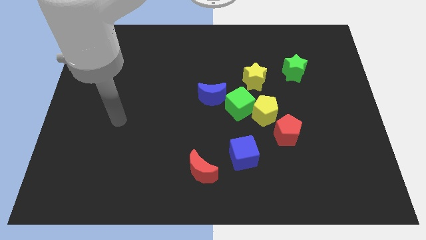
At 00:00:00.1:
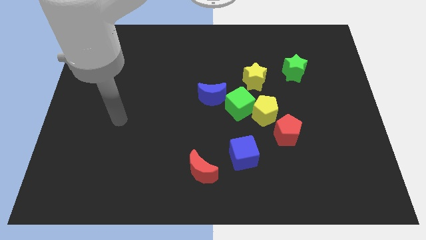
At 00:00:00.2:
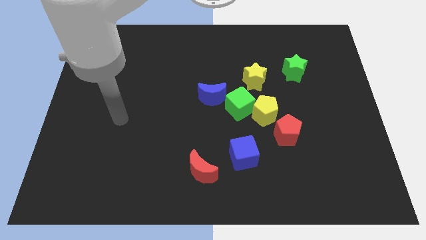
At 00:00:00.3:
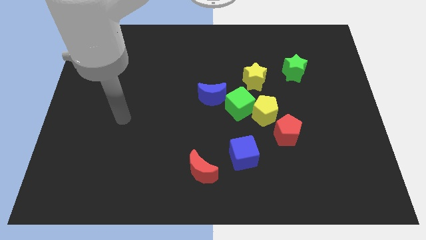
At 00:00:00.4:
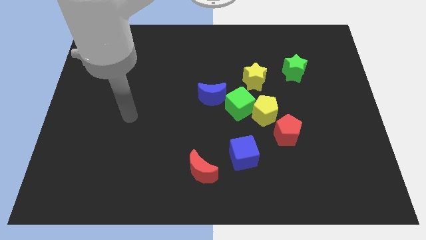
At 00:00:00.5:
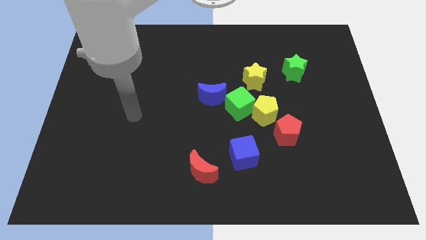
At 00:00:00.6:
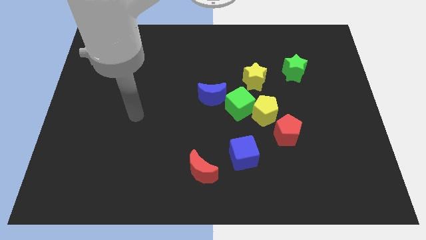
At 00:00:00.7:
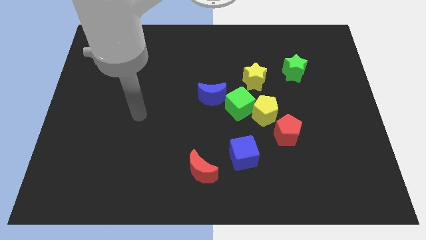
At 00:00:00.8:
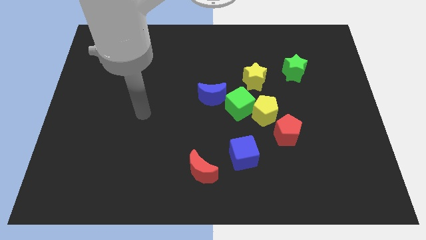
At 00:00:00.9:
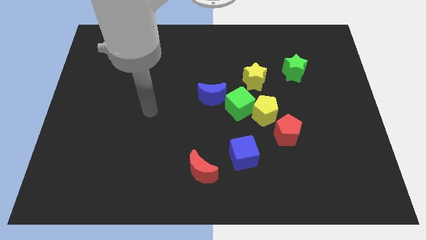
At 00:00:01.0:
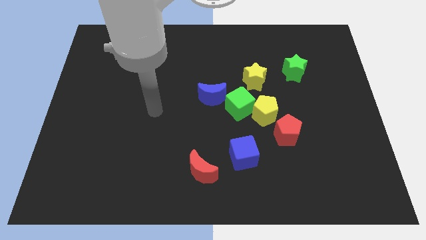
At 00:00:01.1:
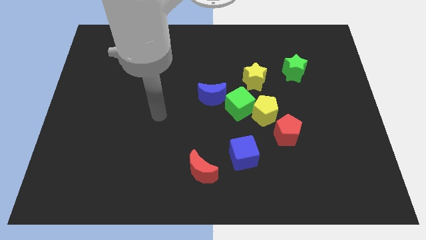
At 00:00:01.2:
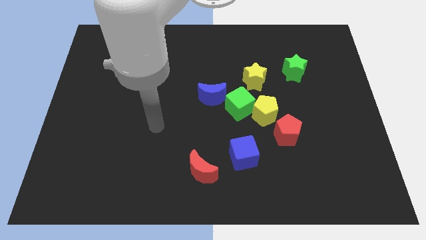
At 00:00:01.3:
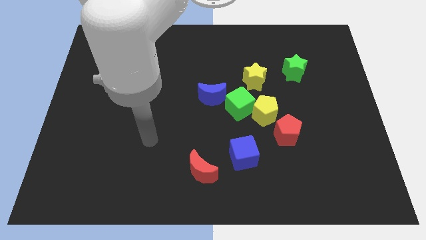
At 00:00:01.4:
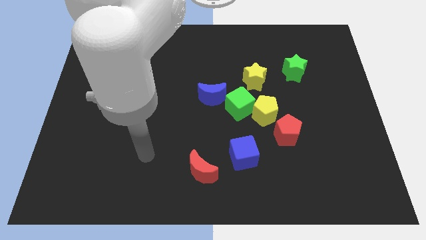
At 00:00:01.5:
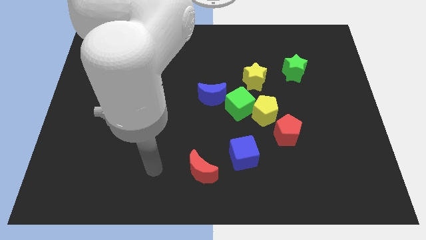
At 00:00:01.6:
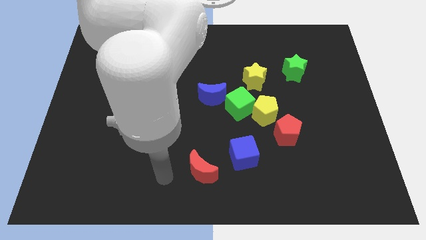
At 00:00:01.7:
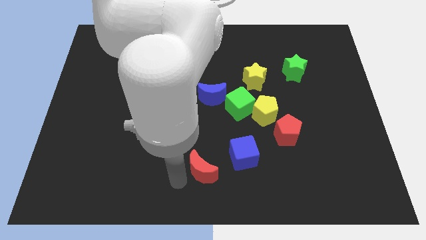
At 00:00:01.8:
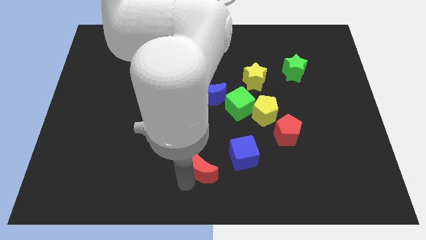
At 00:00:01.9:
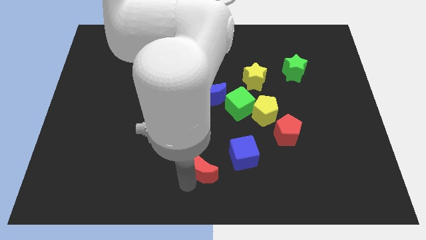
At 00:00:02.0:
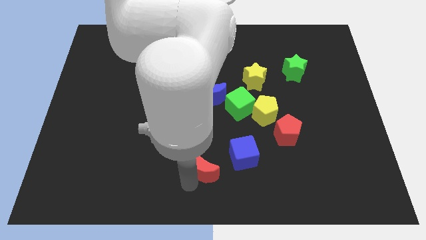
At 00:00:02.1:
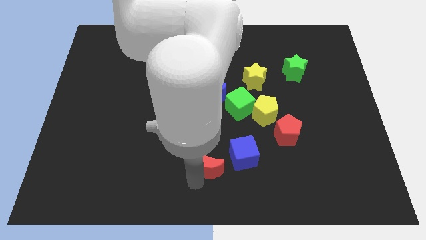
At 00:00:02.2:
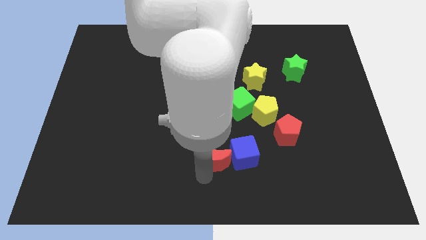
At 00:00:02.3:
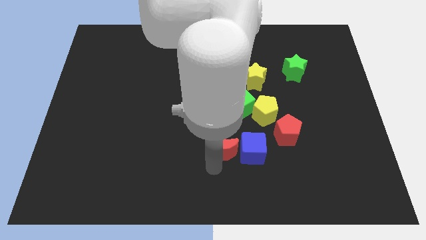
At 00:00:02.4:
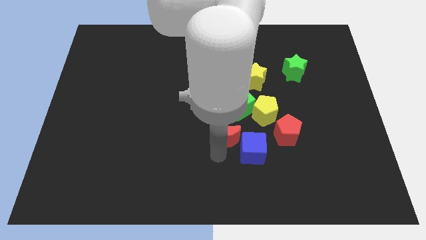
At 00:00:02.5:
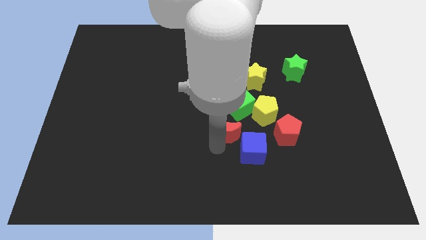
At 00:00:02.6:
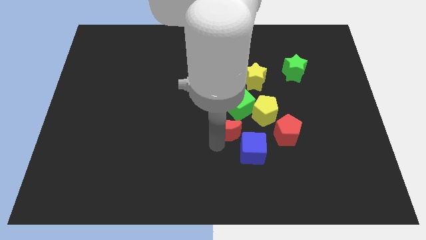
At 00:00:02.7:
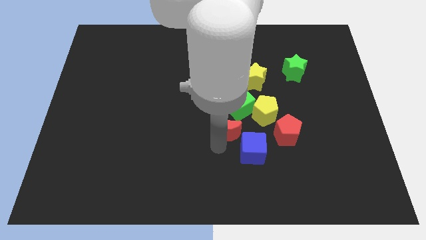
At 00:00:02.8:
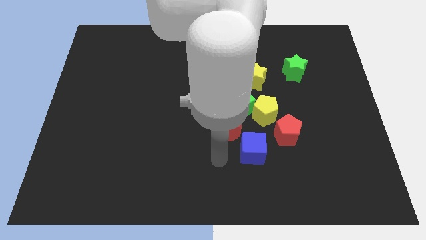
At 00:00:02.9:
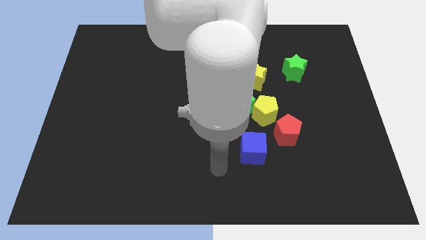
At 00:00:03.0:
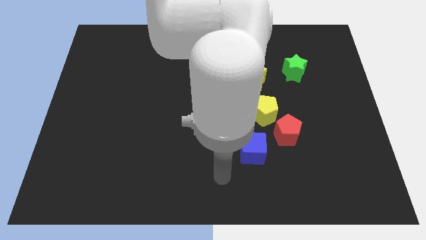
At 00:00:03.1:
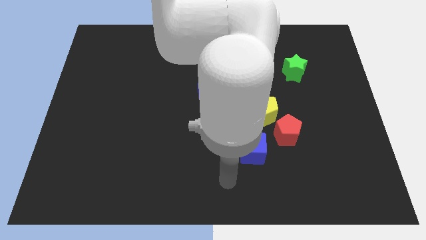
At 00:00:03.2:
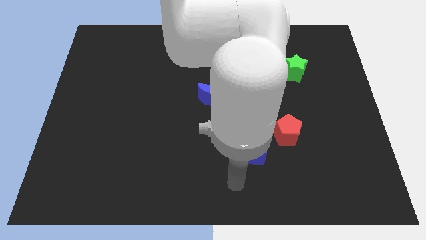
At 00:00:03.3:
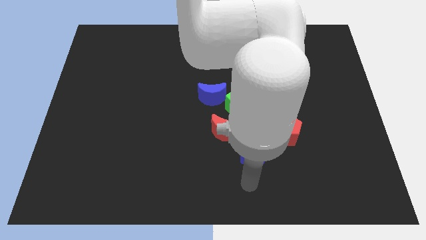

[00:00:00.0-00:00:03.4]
move the red crescent to the bottom left side of the green cube

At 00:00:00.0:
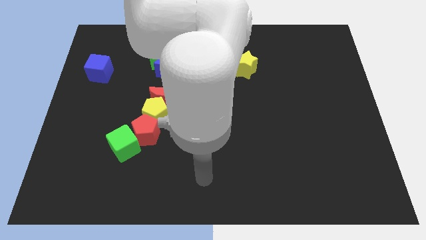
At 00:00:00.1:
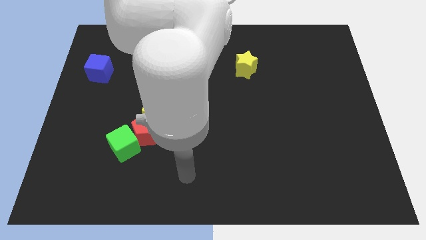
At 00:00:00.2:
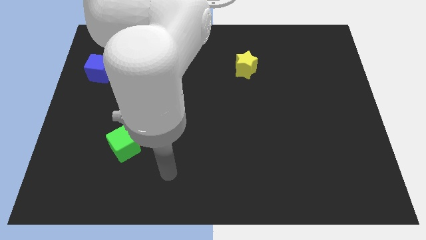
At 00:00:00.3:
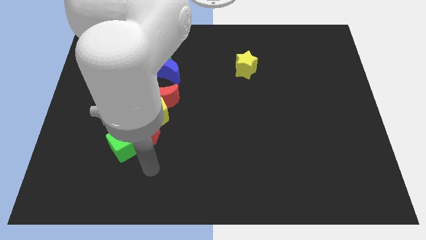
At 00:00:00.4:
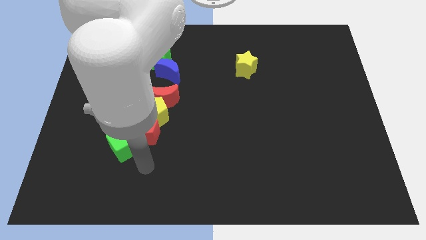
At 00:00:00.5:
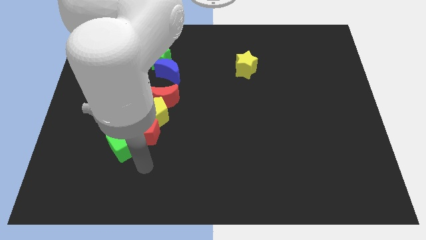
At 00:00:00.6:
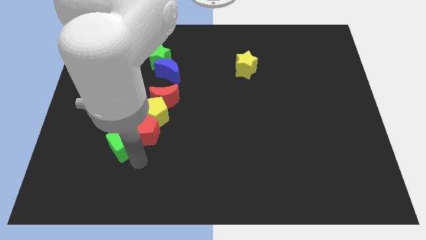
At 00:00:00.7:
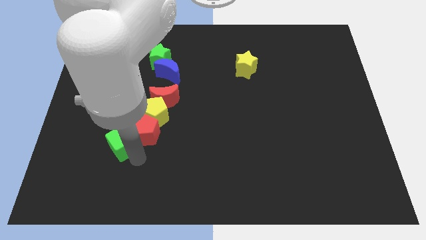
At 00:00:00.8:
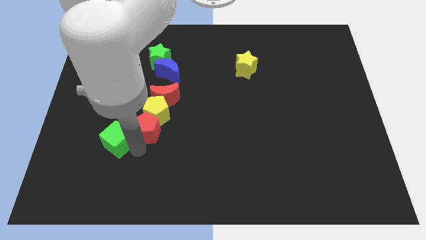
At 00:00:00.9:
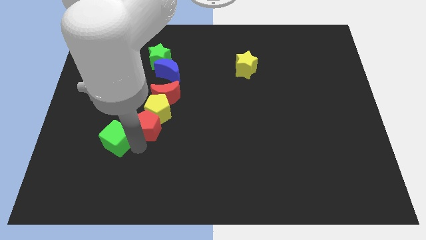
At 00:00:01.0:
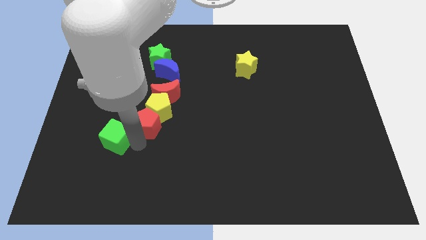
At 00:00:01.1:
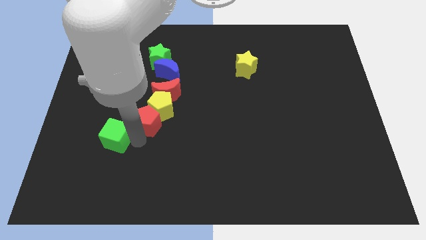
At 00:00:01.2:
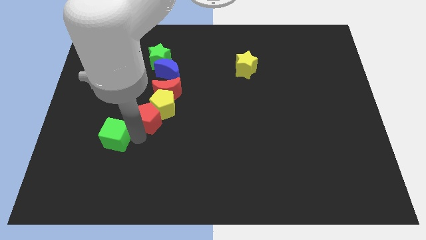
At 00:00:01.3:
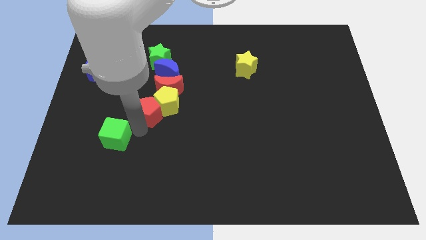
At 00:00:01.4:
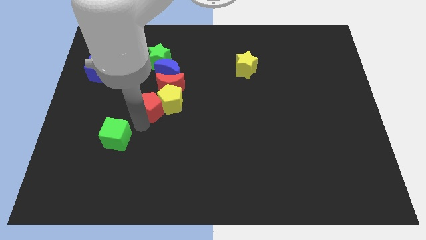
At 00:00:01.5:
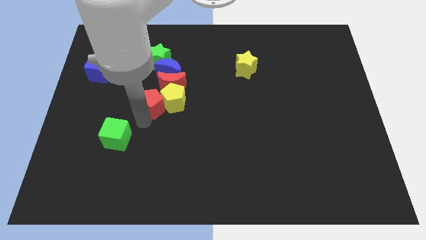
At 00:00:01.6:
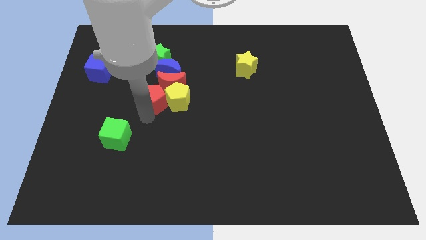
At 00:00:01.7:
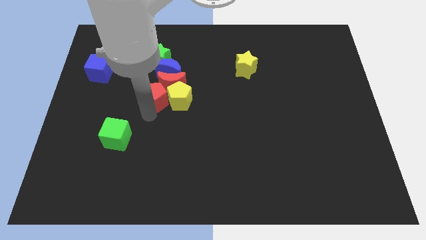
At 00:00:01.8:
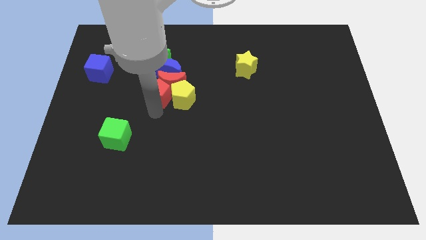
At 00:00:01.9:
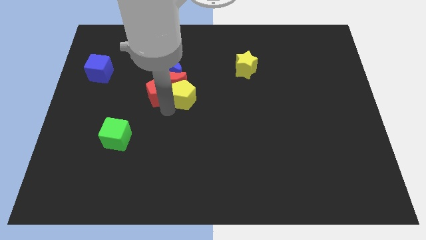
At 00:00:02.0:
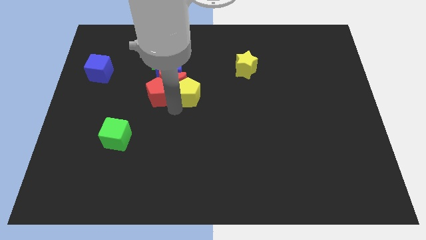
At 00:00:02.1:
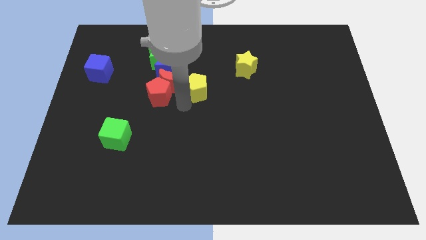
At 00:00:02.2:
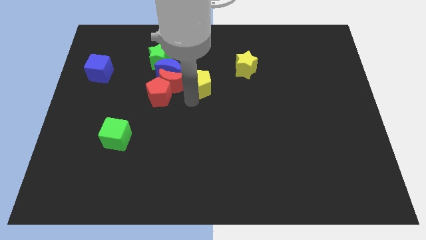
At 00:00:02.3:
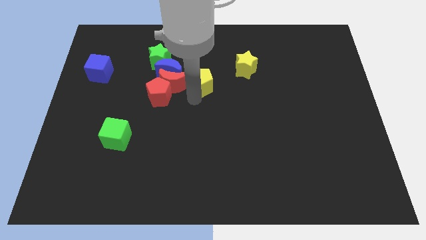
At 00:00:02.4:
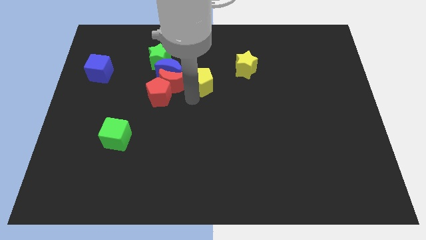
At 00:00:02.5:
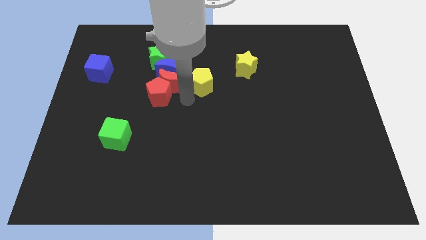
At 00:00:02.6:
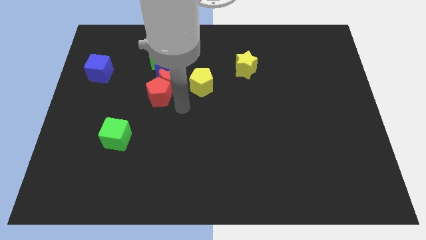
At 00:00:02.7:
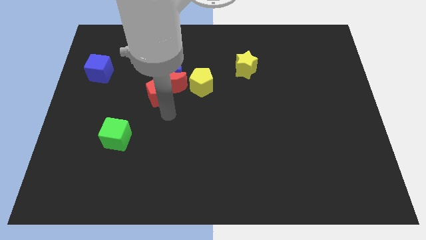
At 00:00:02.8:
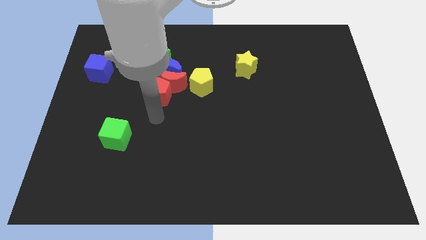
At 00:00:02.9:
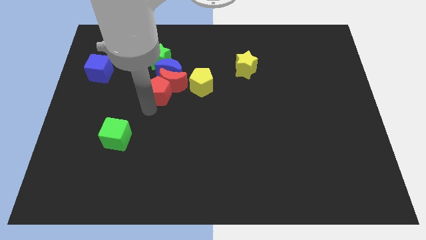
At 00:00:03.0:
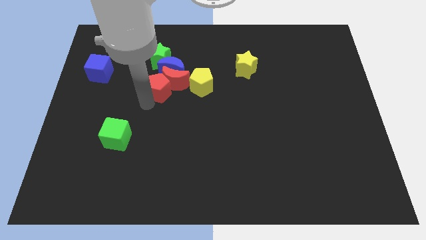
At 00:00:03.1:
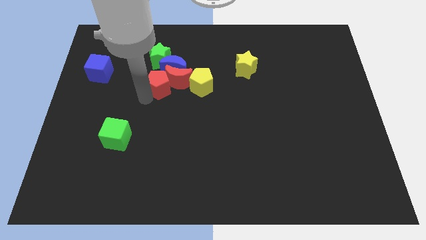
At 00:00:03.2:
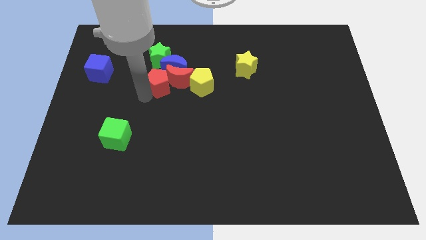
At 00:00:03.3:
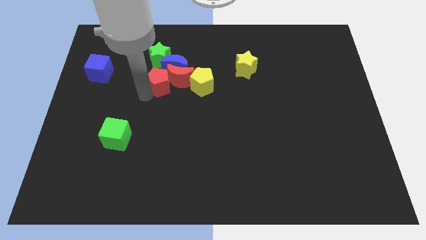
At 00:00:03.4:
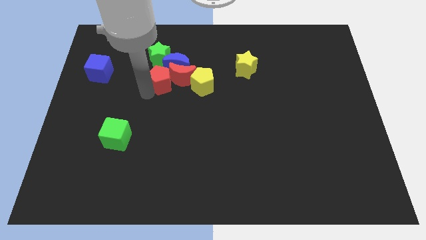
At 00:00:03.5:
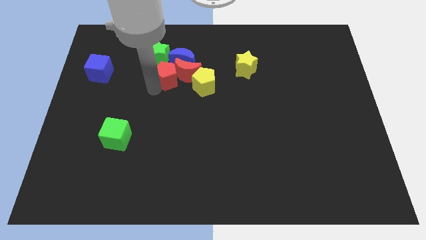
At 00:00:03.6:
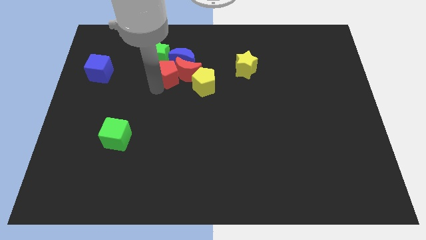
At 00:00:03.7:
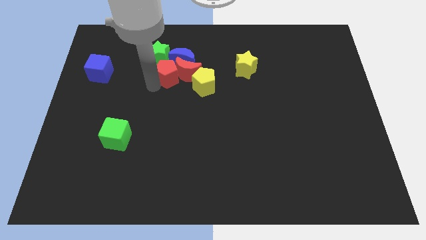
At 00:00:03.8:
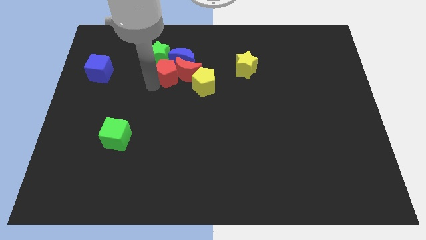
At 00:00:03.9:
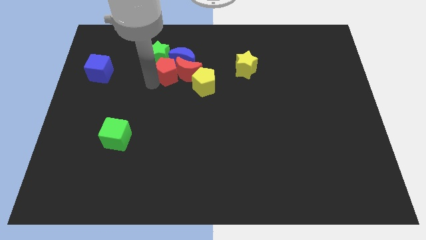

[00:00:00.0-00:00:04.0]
push the red pentagon away from the green cube

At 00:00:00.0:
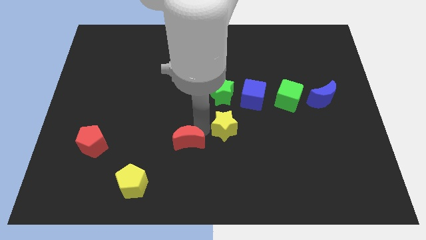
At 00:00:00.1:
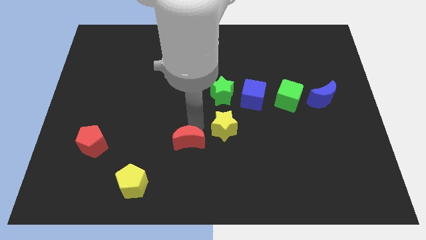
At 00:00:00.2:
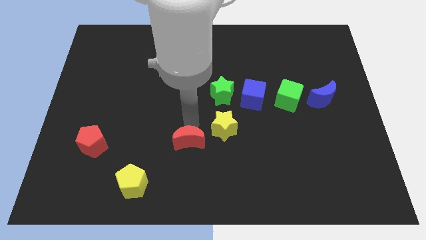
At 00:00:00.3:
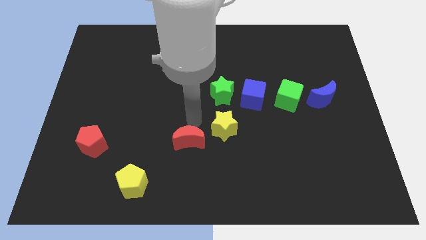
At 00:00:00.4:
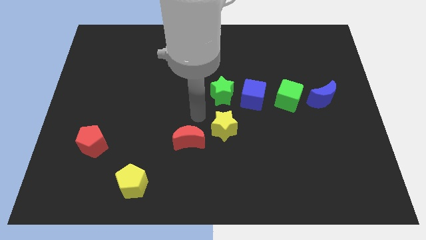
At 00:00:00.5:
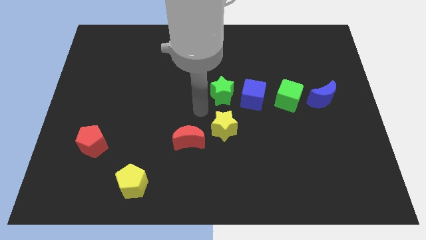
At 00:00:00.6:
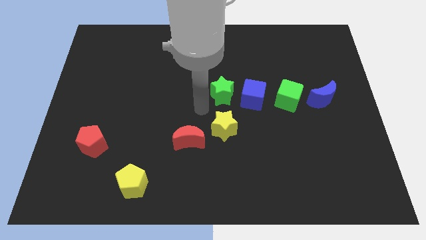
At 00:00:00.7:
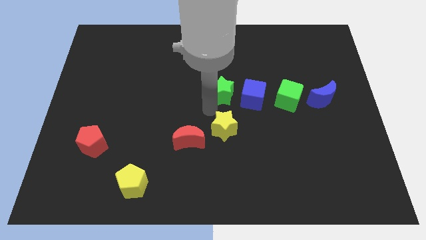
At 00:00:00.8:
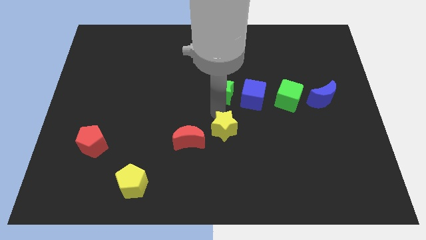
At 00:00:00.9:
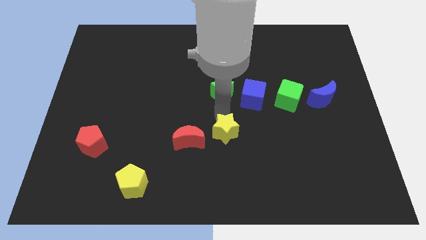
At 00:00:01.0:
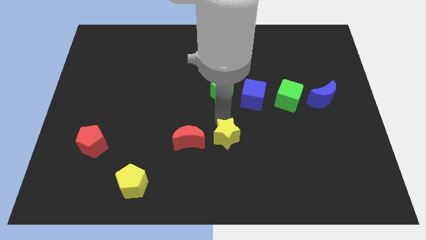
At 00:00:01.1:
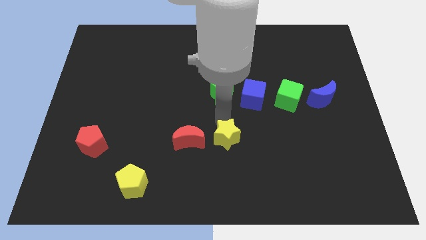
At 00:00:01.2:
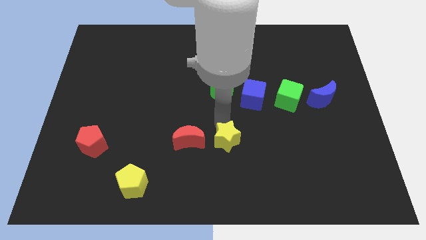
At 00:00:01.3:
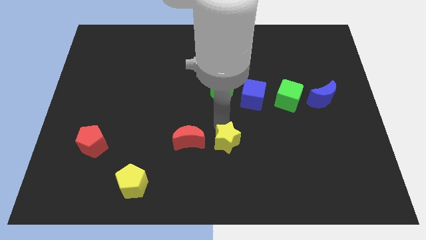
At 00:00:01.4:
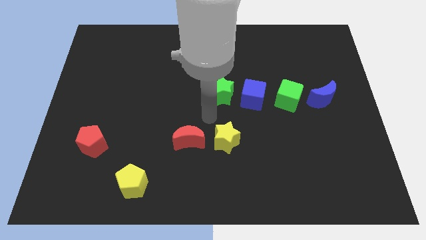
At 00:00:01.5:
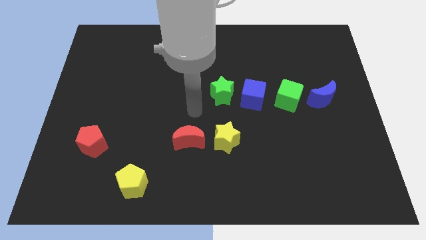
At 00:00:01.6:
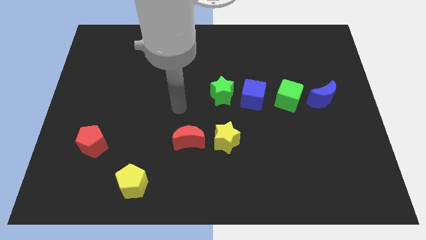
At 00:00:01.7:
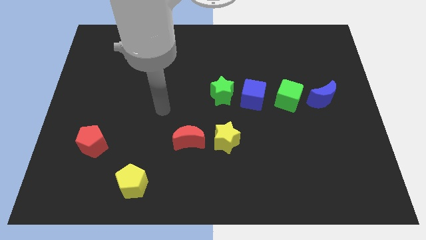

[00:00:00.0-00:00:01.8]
place the yellow star on the right side of red moon
